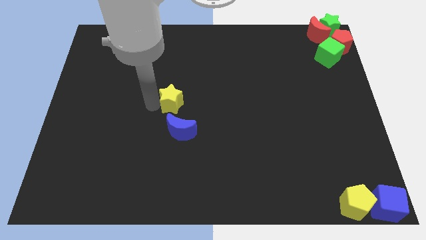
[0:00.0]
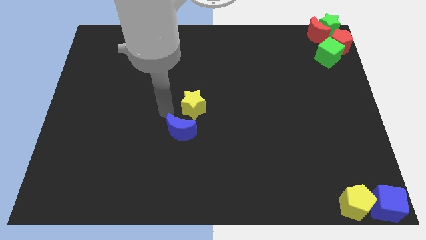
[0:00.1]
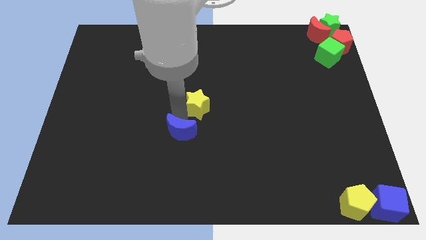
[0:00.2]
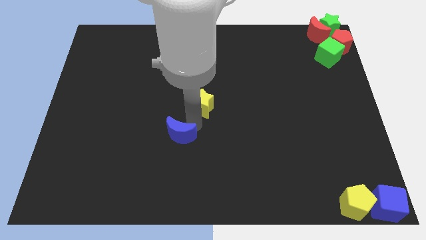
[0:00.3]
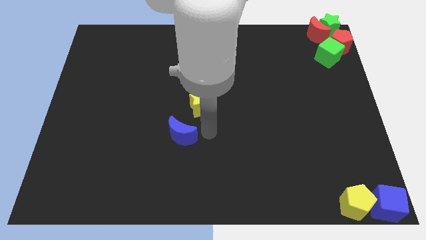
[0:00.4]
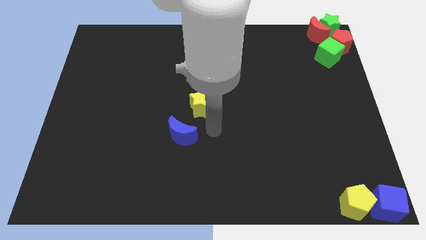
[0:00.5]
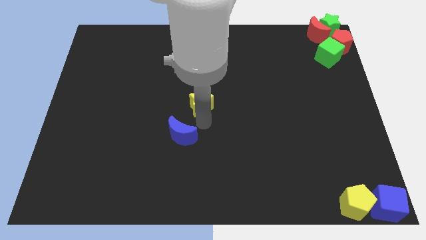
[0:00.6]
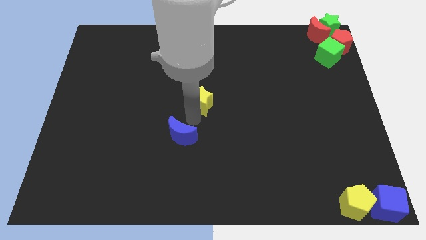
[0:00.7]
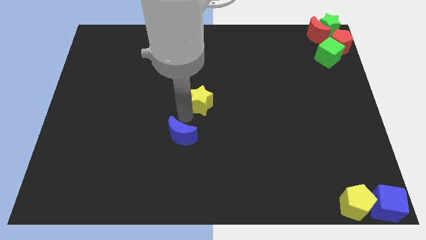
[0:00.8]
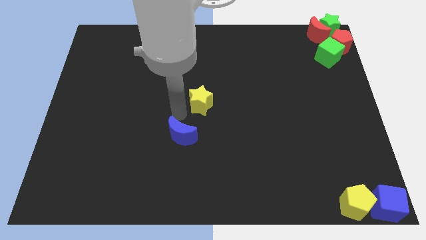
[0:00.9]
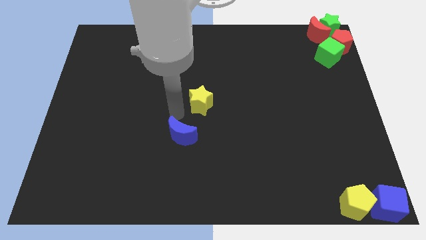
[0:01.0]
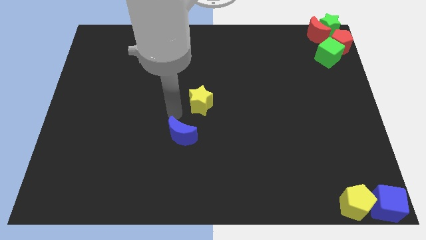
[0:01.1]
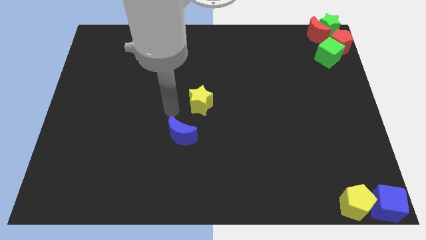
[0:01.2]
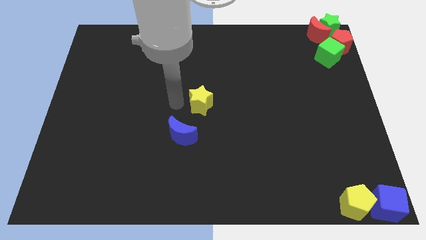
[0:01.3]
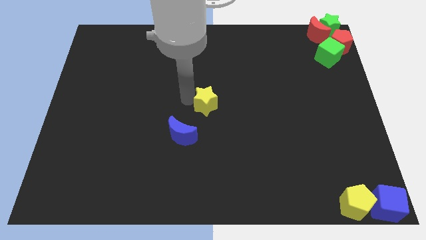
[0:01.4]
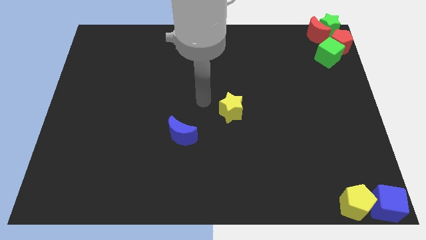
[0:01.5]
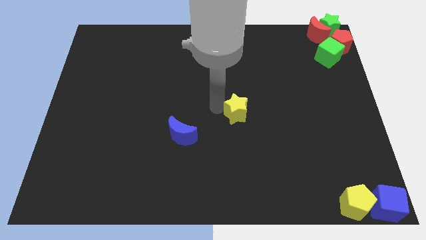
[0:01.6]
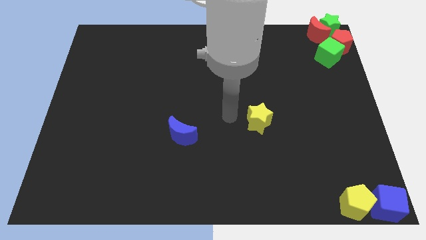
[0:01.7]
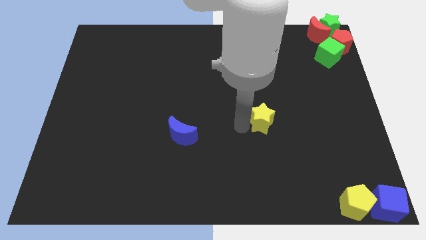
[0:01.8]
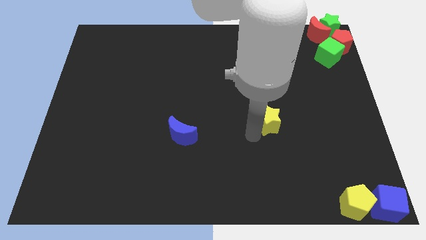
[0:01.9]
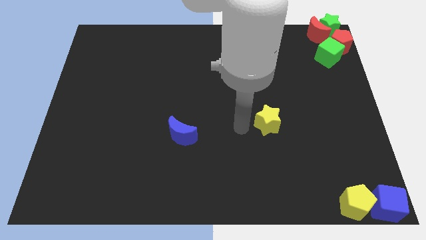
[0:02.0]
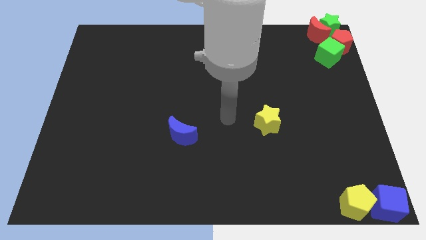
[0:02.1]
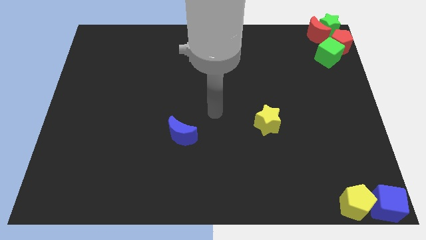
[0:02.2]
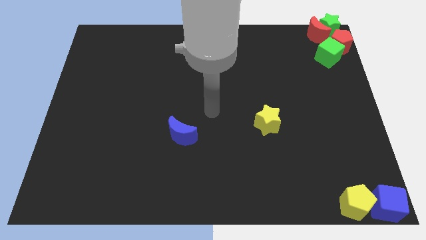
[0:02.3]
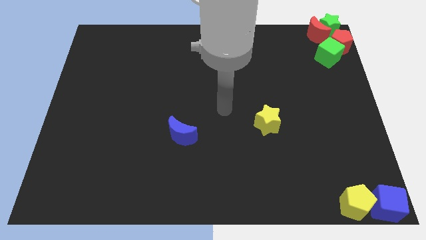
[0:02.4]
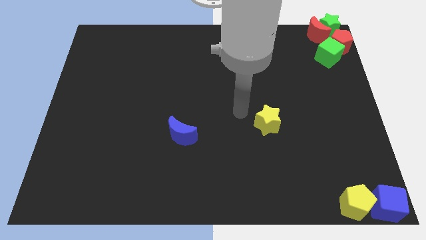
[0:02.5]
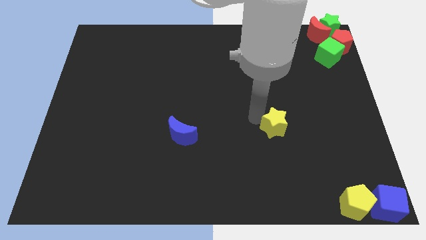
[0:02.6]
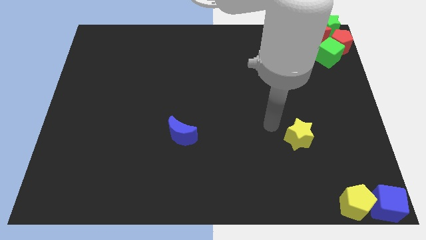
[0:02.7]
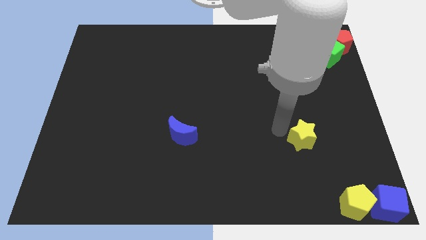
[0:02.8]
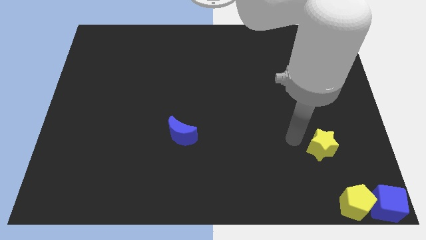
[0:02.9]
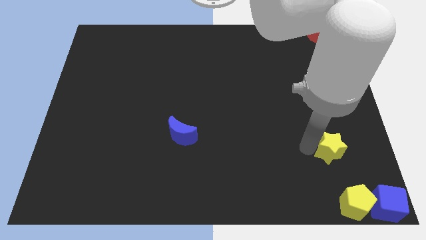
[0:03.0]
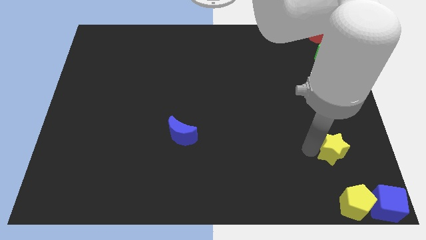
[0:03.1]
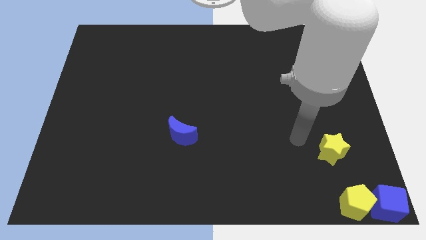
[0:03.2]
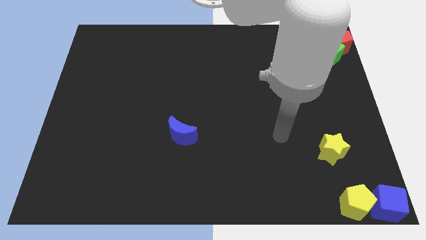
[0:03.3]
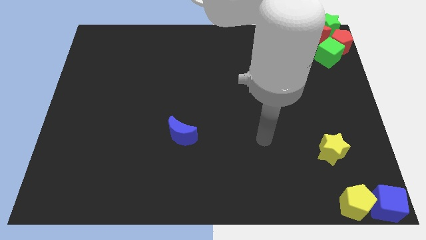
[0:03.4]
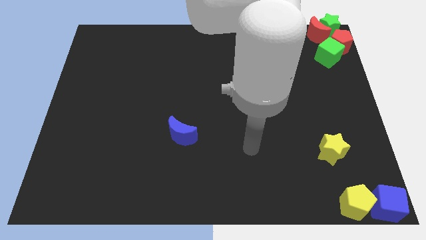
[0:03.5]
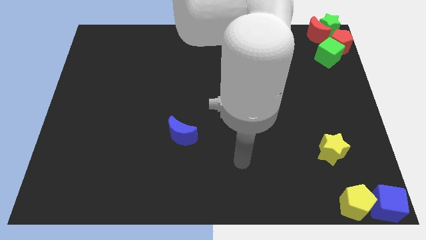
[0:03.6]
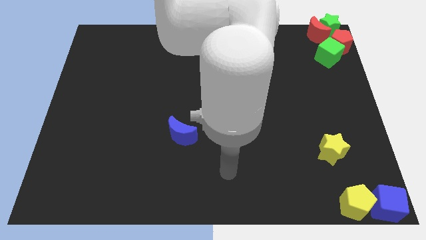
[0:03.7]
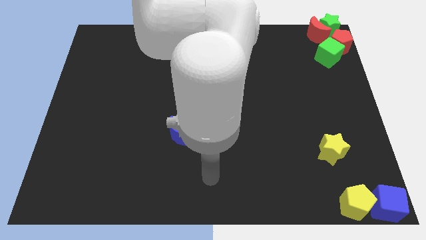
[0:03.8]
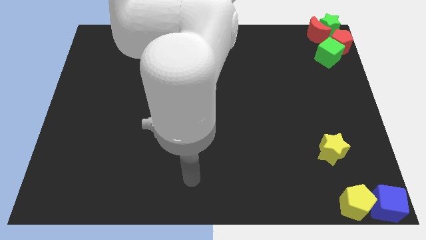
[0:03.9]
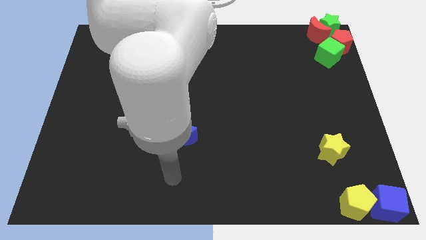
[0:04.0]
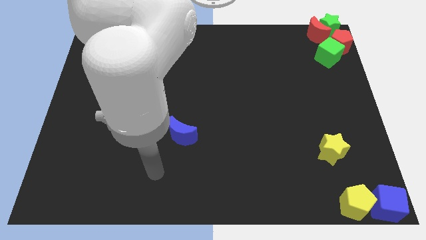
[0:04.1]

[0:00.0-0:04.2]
drag the yellow star towards the blue cube

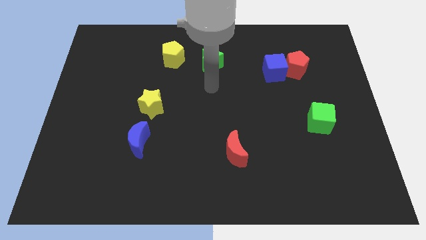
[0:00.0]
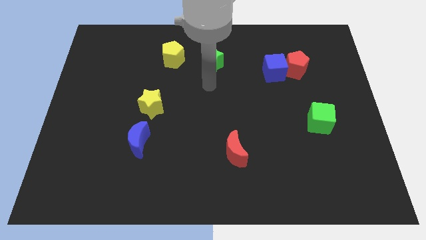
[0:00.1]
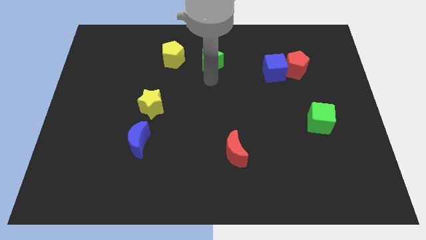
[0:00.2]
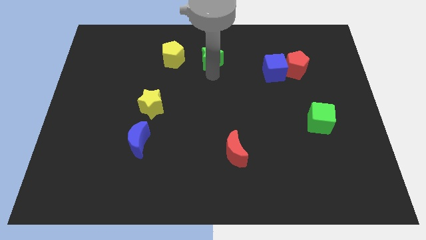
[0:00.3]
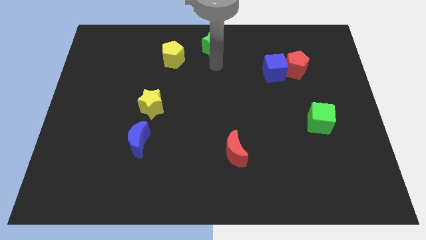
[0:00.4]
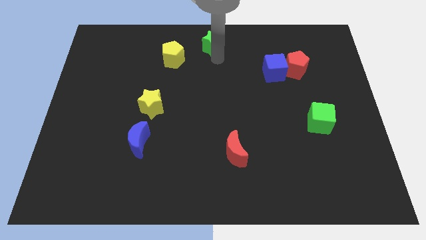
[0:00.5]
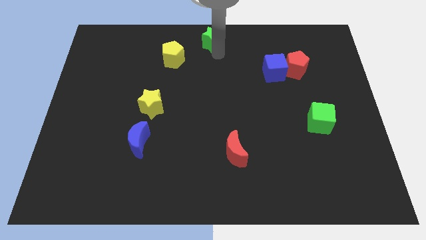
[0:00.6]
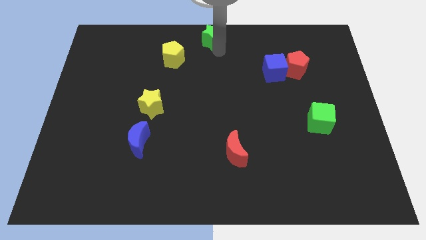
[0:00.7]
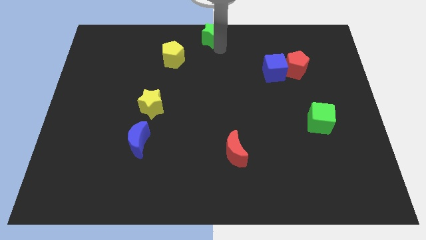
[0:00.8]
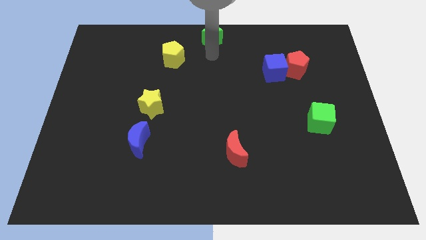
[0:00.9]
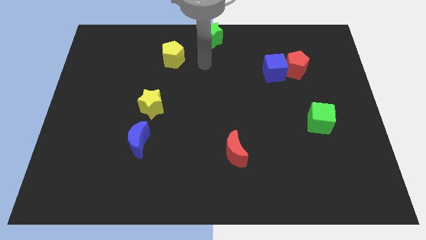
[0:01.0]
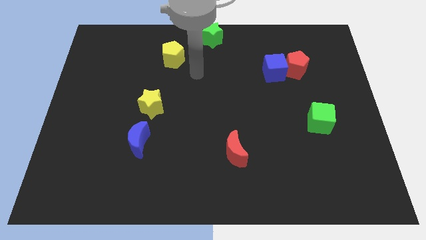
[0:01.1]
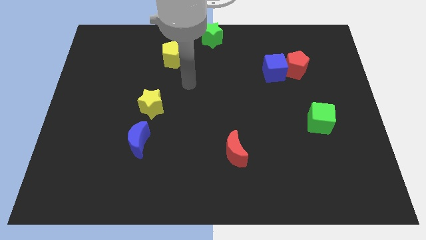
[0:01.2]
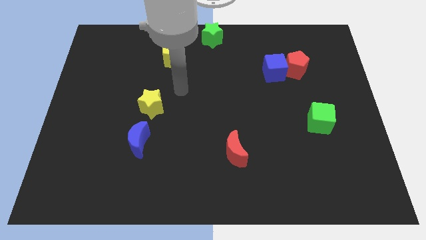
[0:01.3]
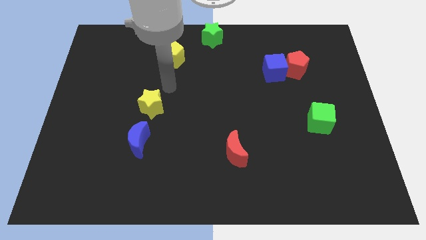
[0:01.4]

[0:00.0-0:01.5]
push the green star to the top center of the board

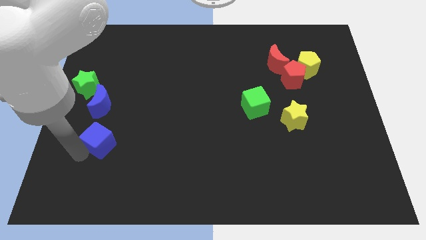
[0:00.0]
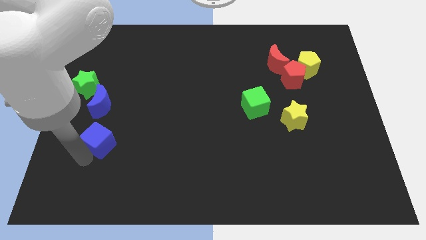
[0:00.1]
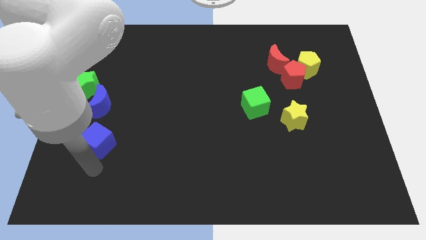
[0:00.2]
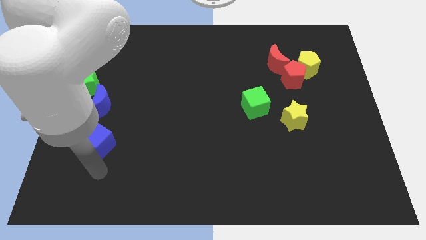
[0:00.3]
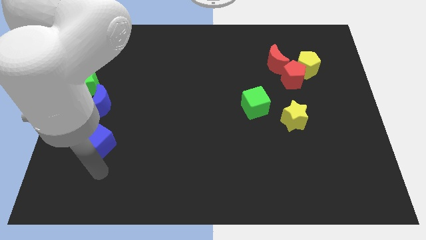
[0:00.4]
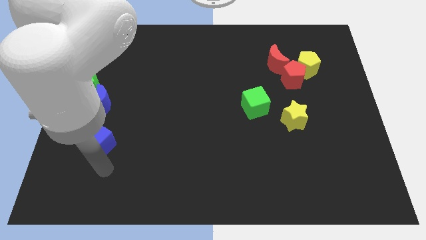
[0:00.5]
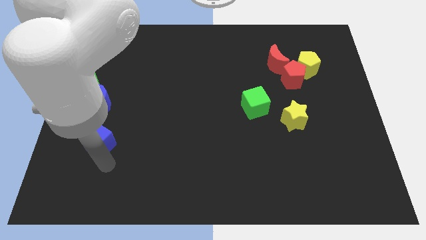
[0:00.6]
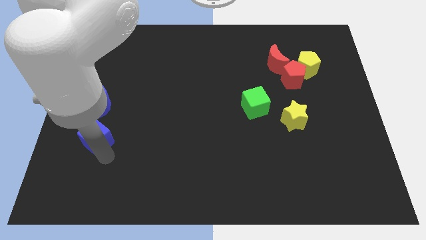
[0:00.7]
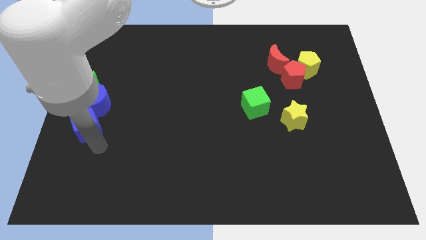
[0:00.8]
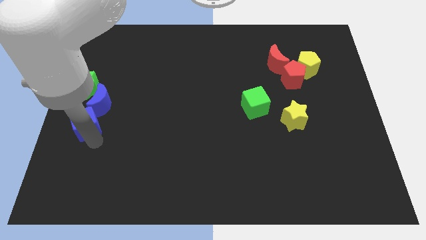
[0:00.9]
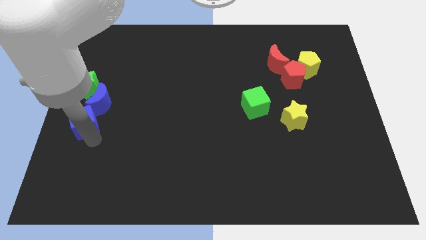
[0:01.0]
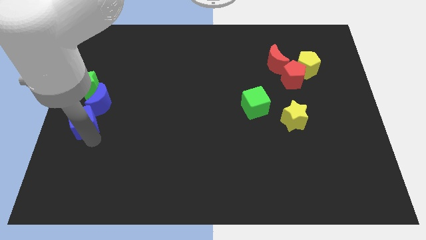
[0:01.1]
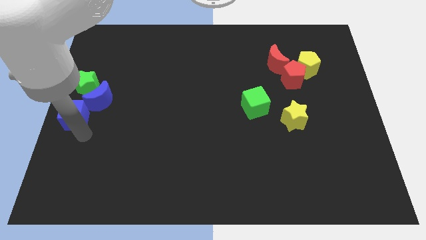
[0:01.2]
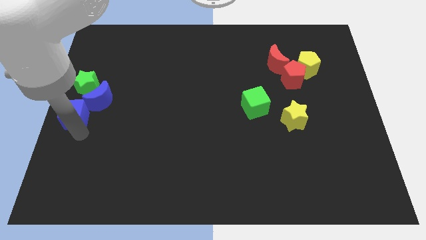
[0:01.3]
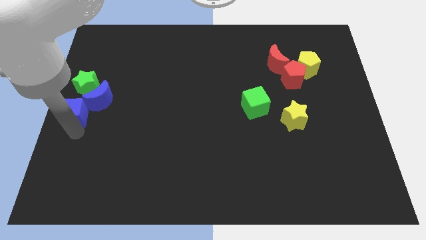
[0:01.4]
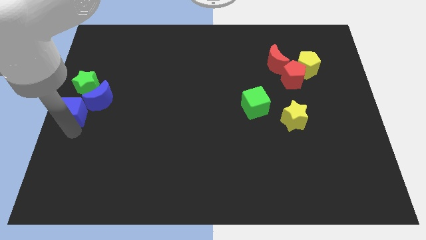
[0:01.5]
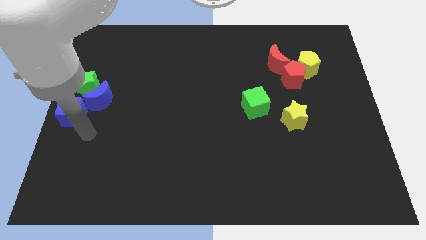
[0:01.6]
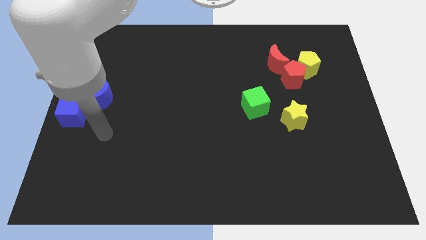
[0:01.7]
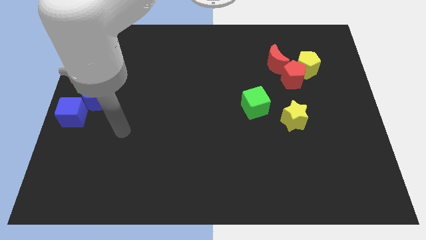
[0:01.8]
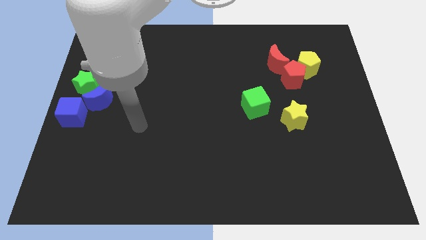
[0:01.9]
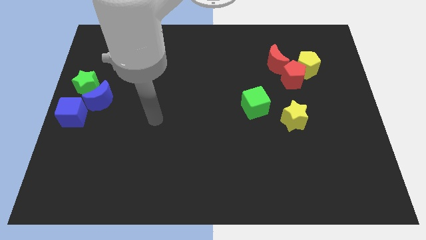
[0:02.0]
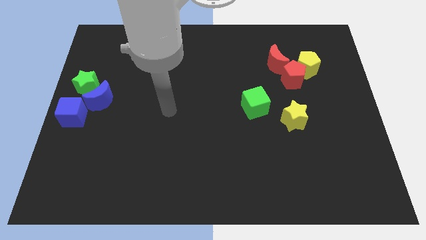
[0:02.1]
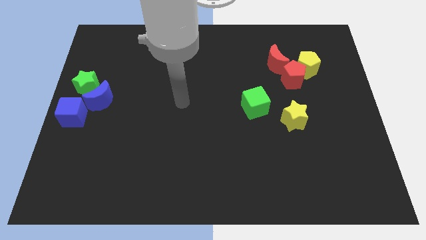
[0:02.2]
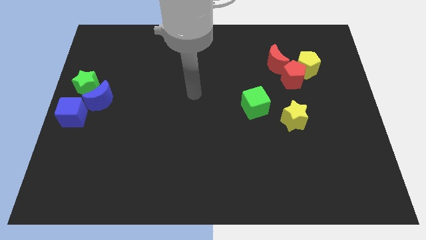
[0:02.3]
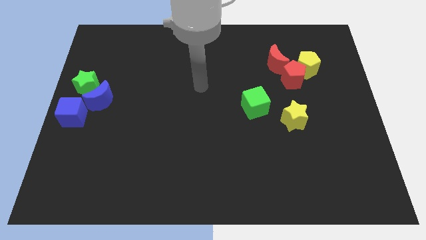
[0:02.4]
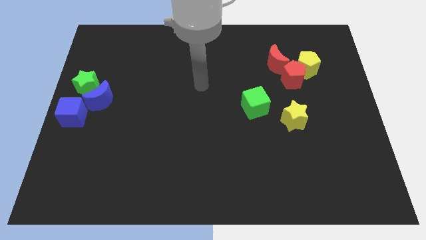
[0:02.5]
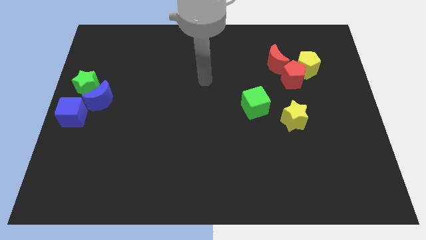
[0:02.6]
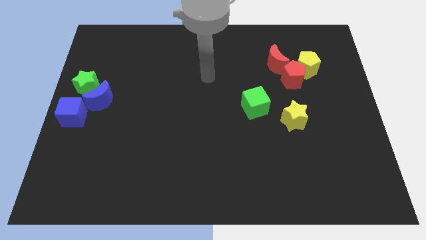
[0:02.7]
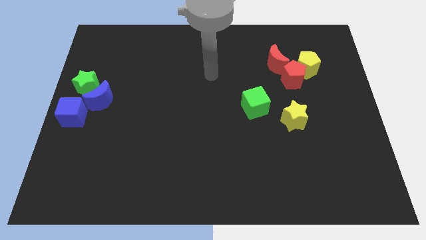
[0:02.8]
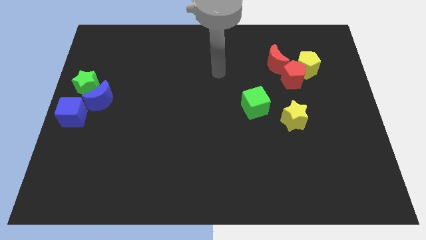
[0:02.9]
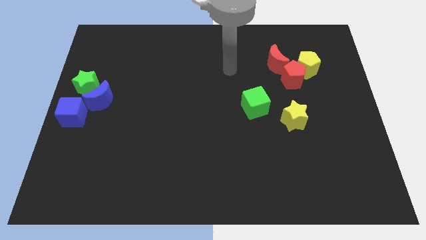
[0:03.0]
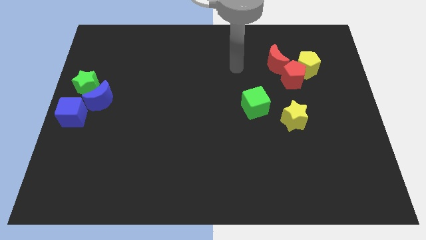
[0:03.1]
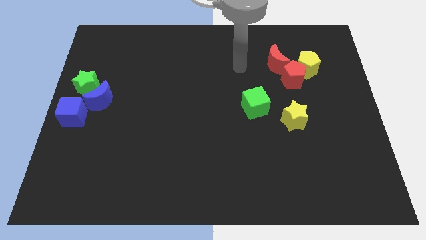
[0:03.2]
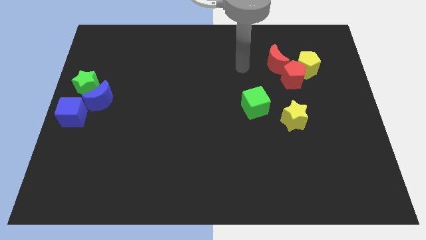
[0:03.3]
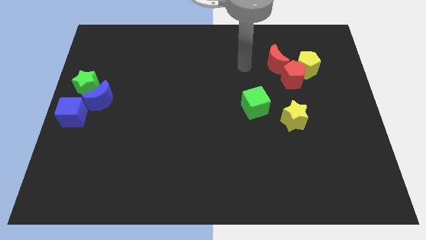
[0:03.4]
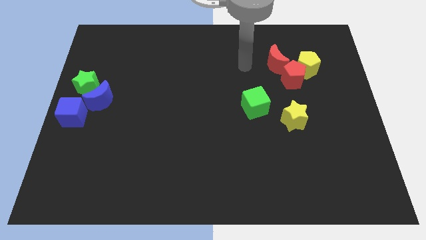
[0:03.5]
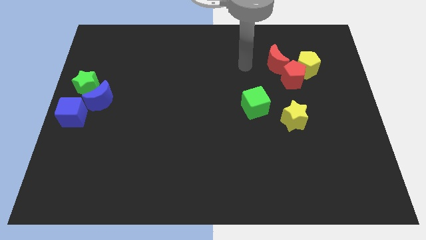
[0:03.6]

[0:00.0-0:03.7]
put the blue cube to the left of the blue moon
